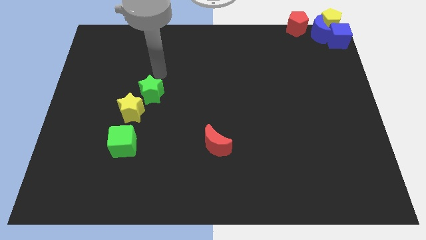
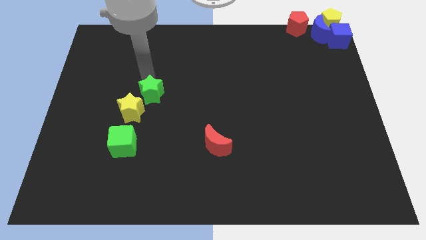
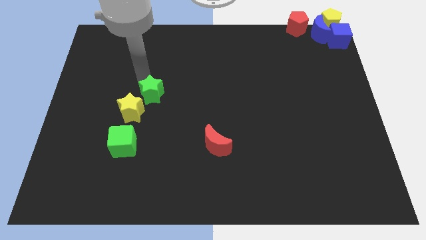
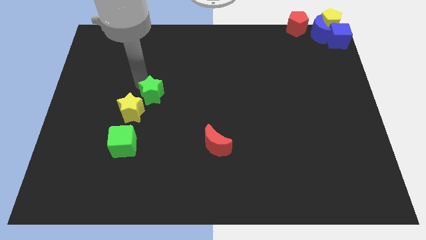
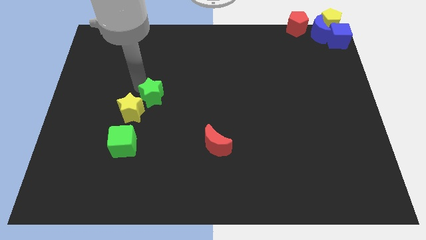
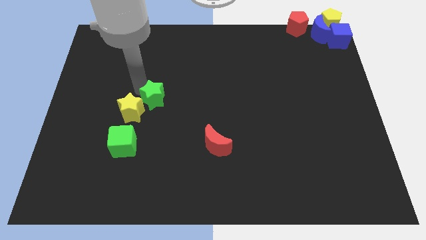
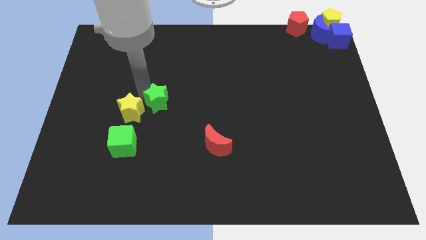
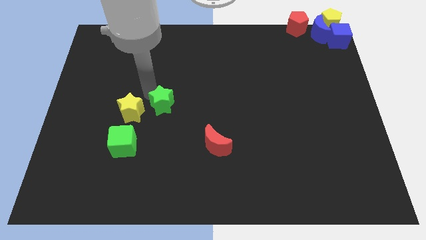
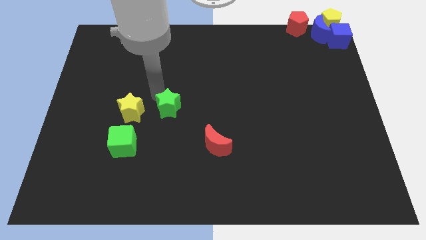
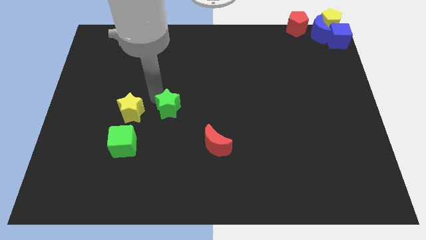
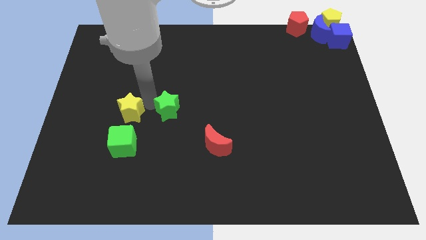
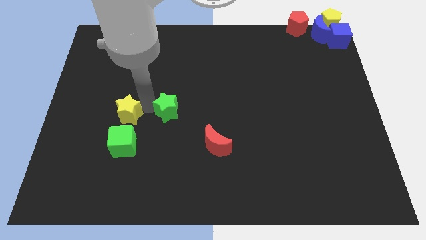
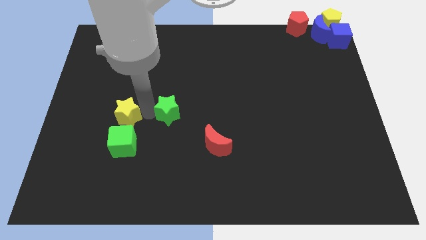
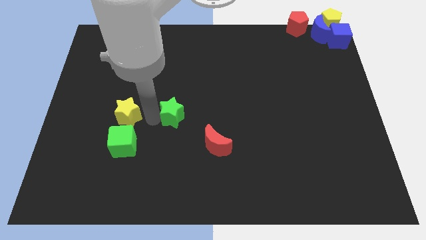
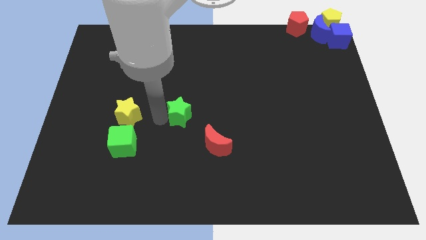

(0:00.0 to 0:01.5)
separate the green star and the yellow star

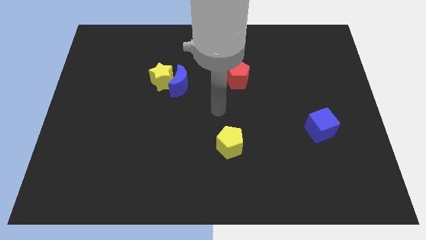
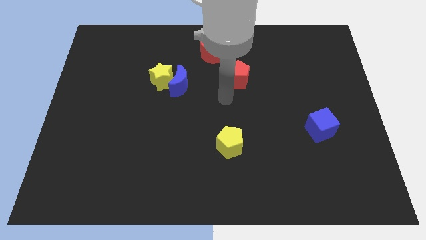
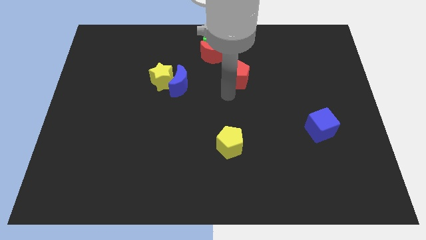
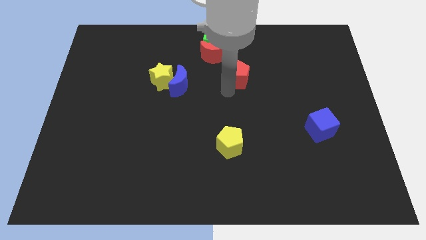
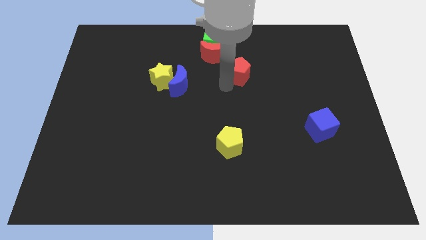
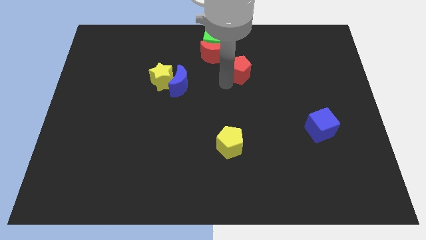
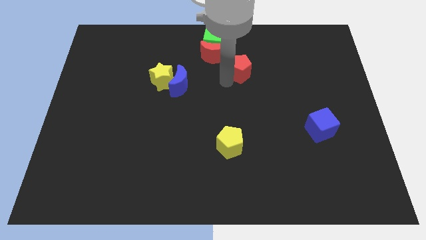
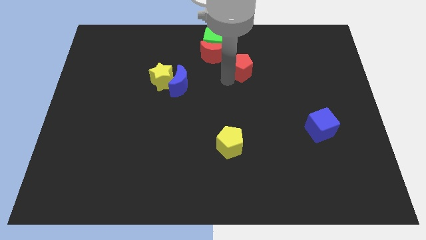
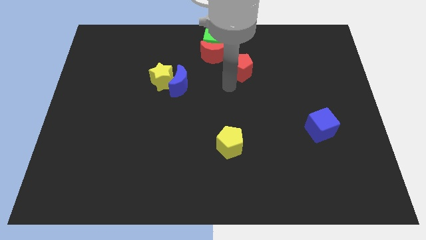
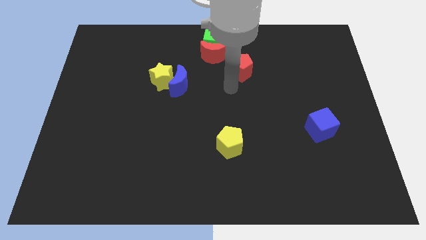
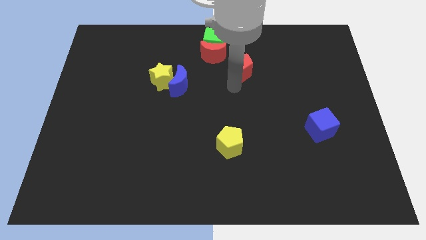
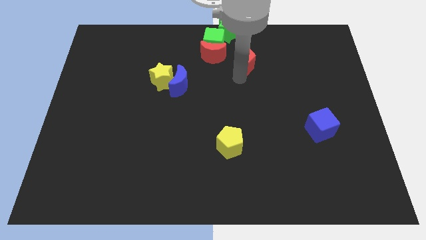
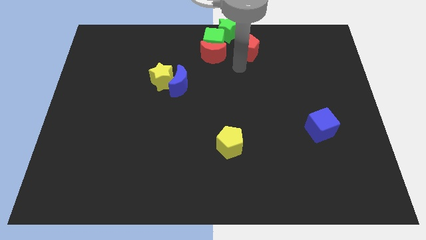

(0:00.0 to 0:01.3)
move the red pentagon to the right side of the green cube

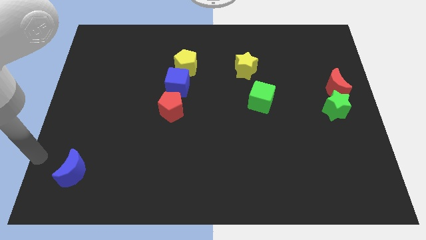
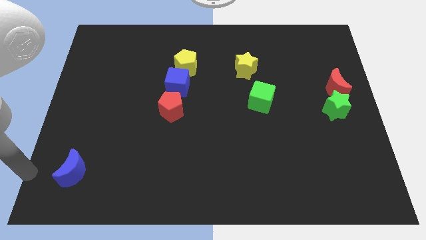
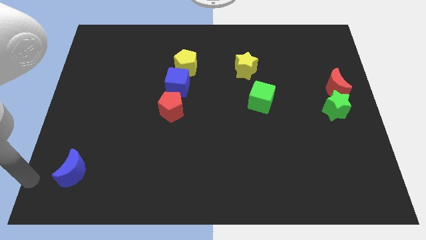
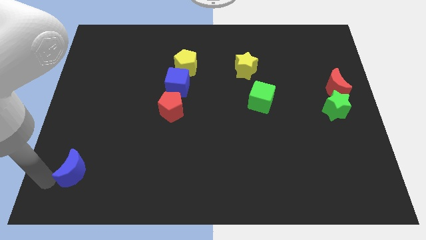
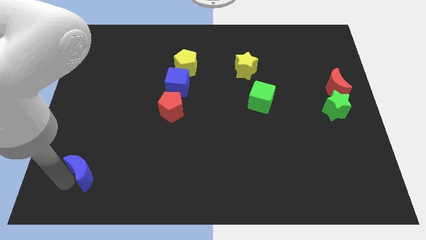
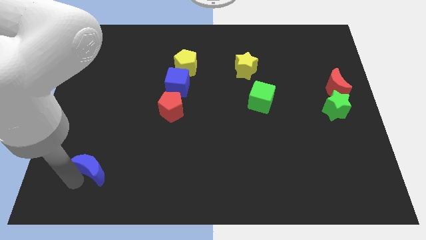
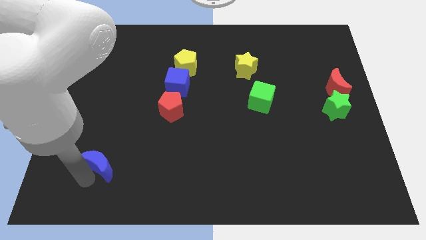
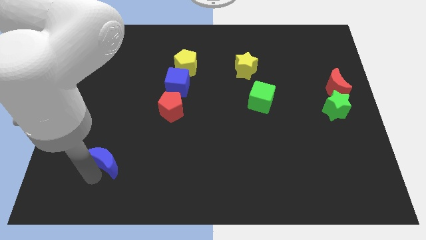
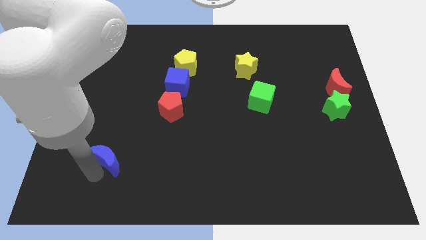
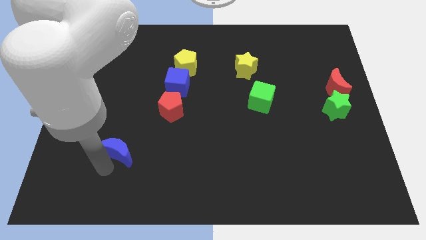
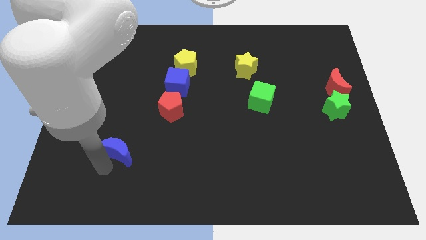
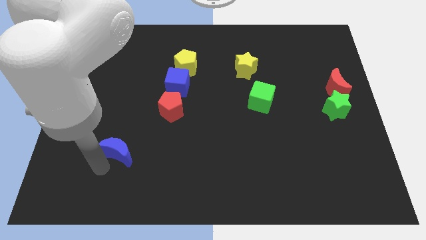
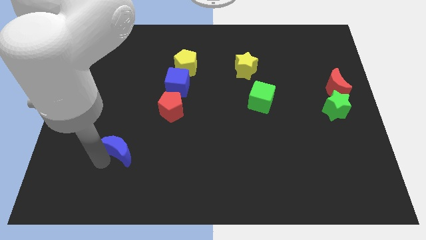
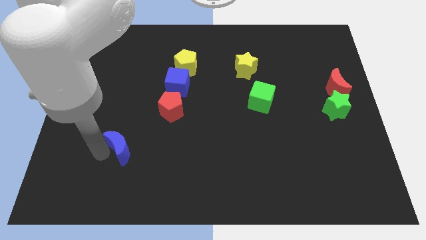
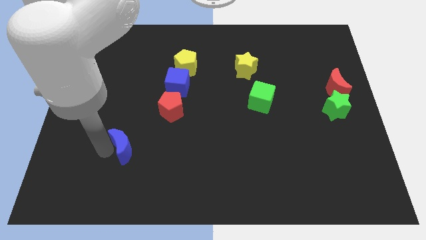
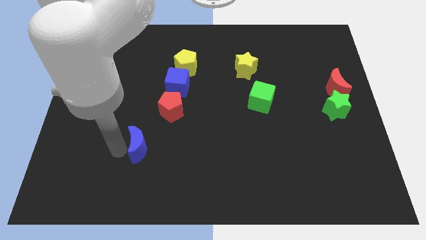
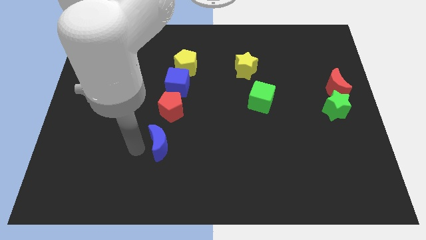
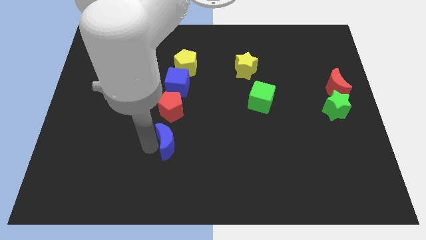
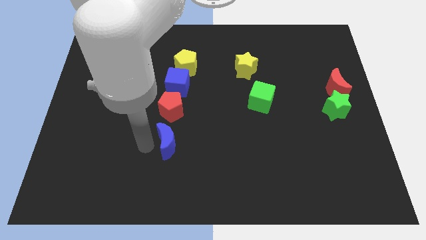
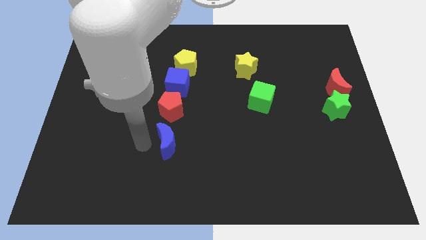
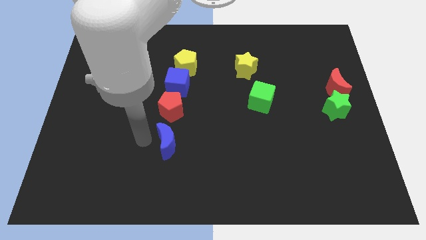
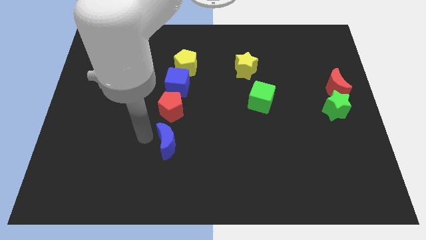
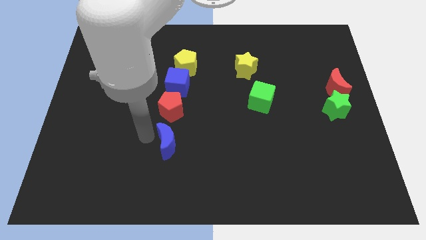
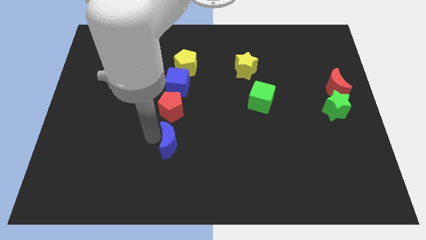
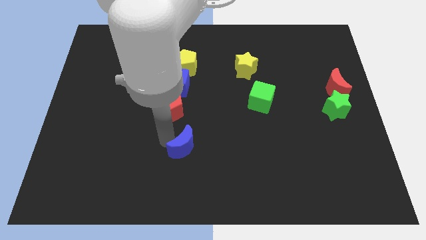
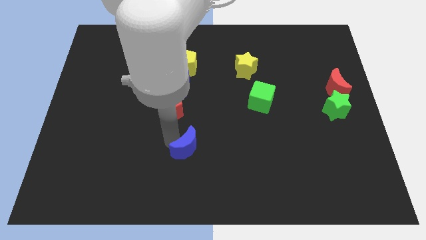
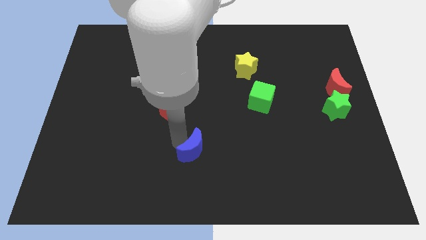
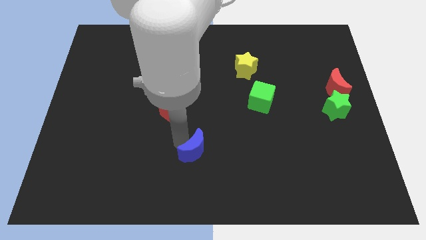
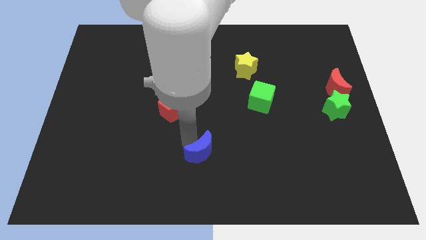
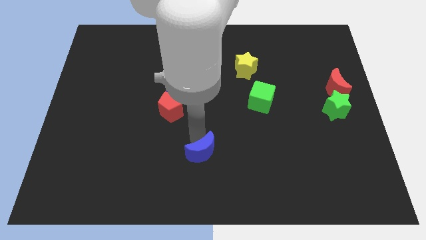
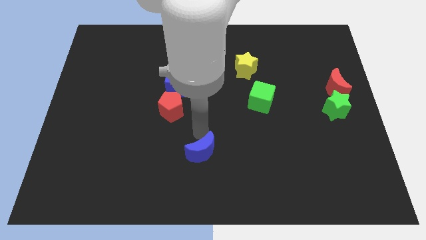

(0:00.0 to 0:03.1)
place the blue moon diagonally bottom right to the blue moon

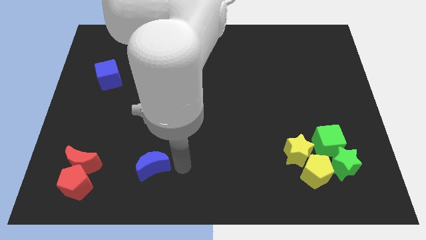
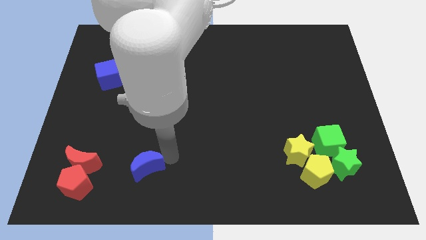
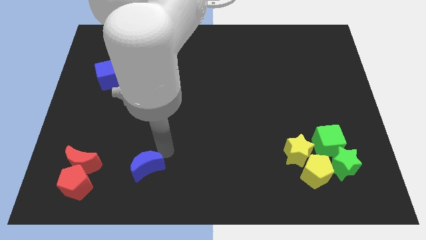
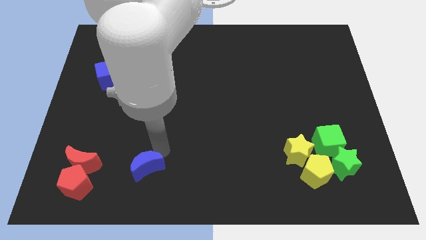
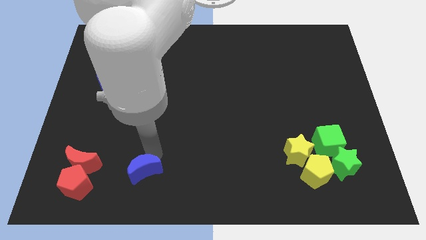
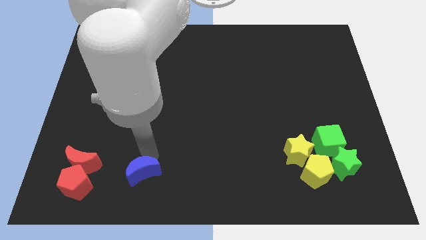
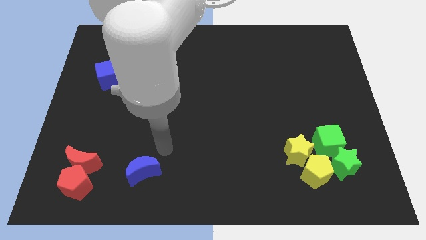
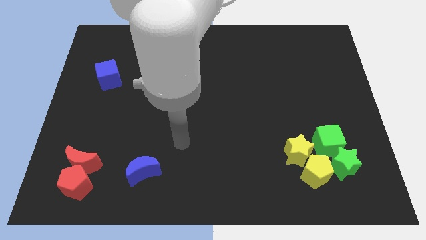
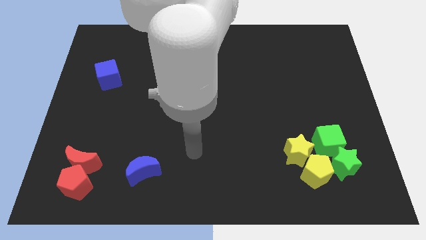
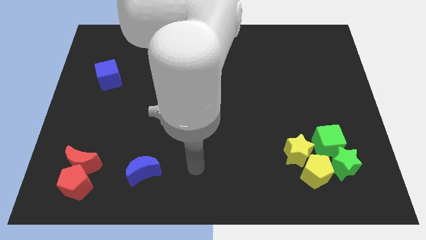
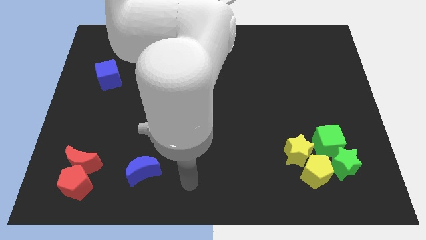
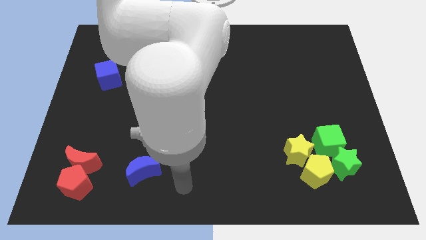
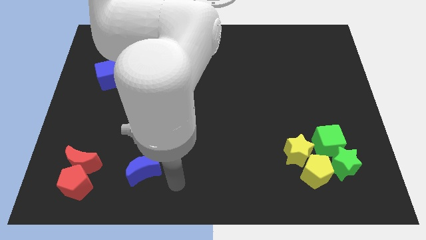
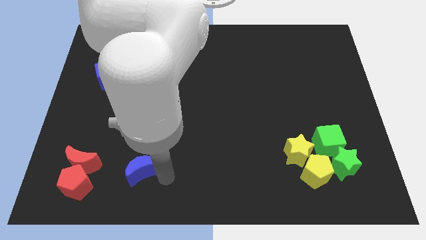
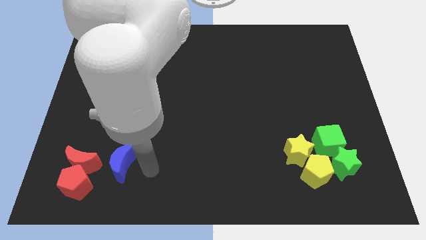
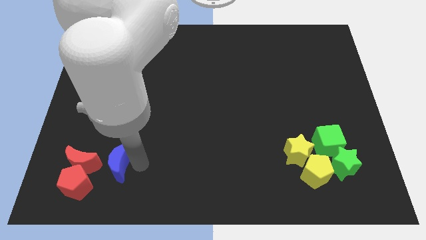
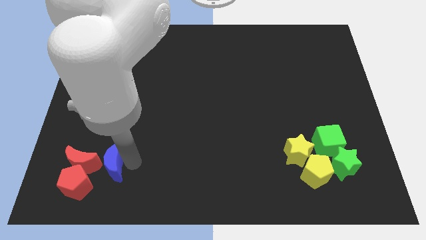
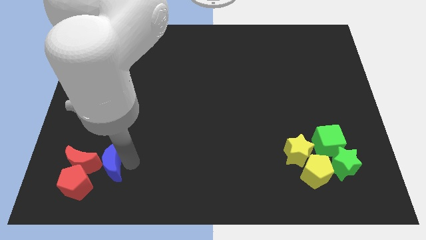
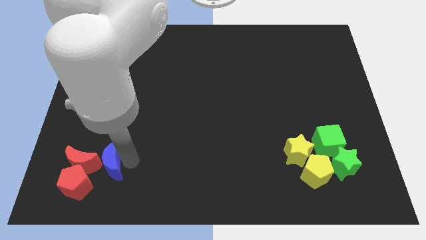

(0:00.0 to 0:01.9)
move the blue crescent to the right side of the red crescent

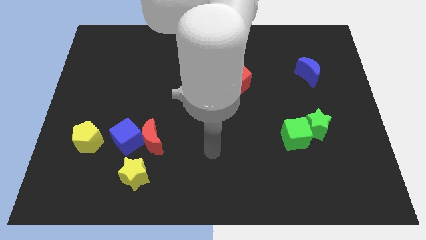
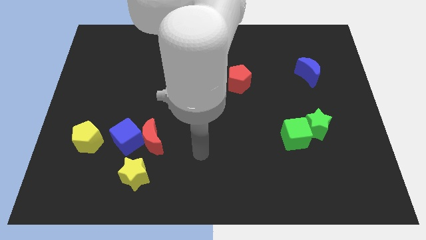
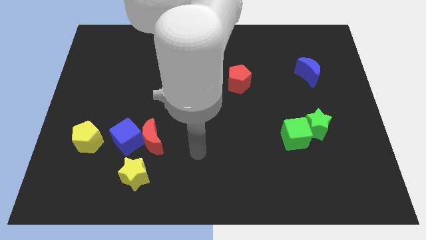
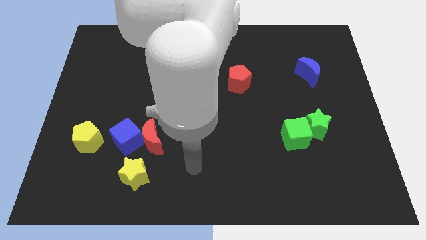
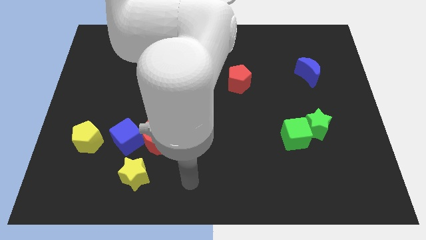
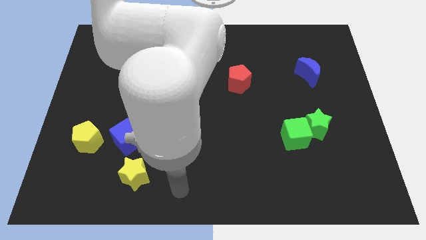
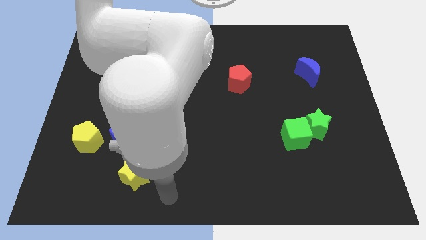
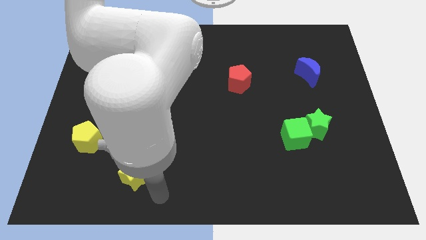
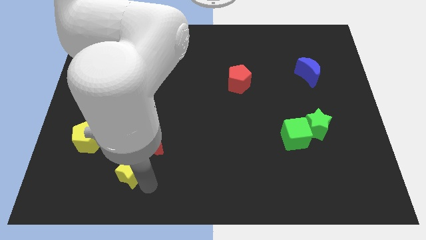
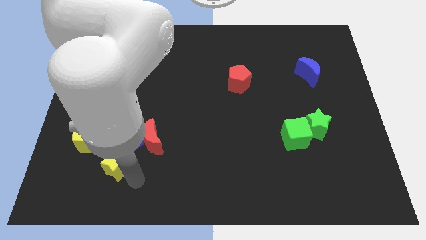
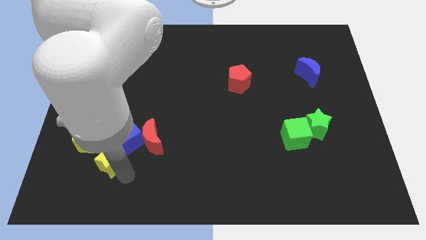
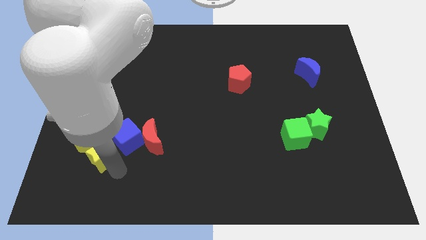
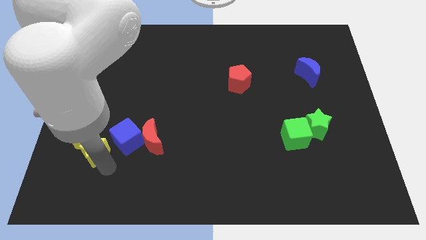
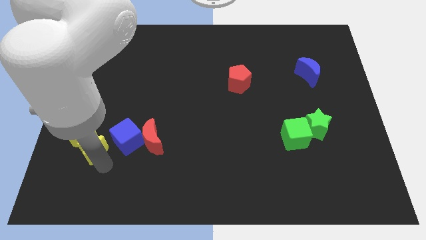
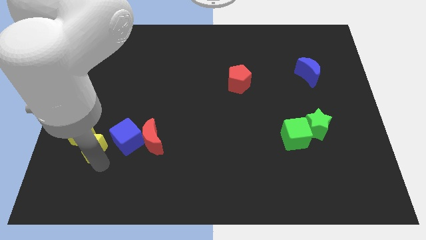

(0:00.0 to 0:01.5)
push the yellow star into the yellow pentagon
